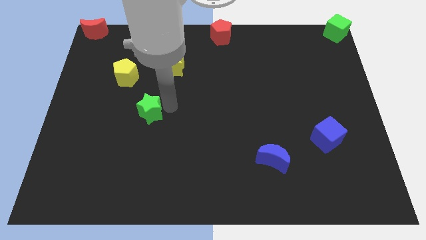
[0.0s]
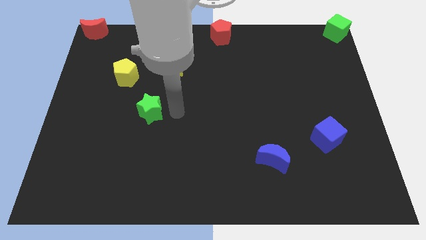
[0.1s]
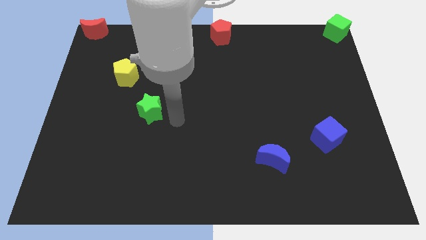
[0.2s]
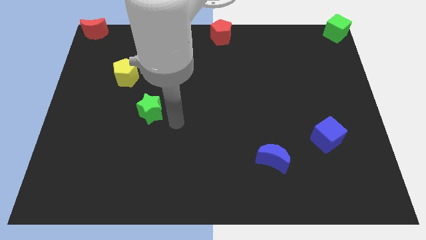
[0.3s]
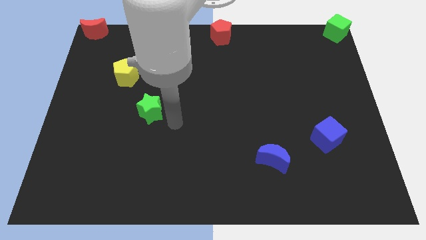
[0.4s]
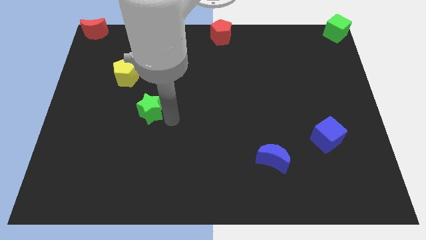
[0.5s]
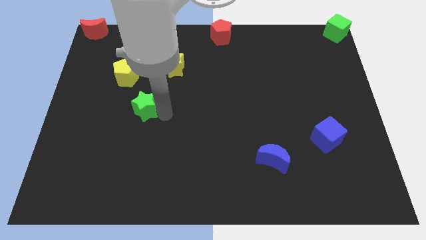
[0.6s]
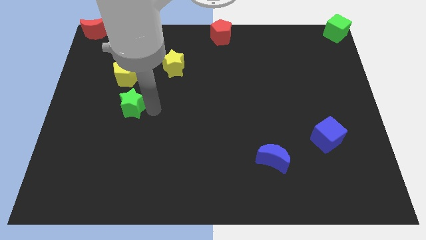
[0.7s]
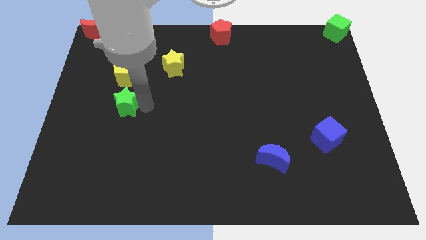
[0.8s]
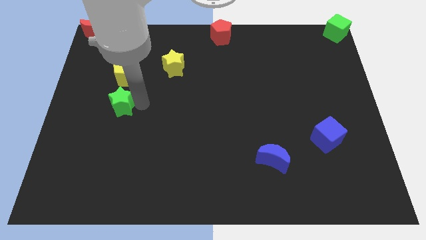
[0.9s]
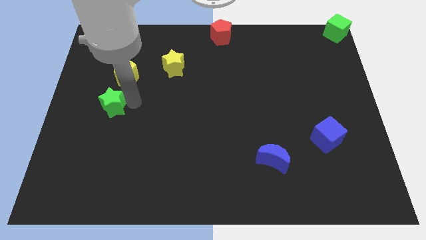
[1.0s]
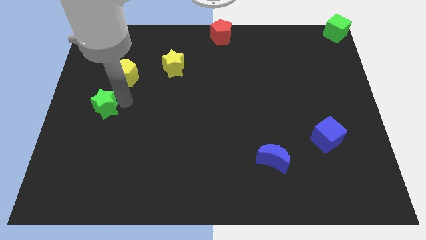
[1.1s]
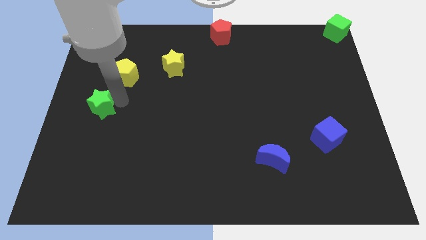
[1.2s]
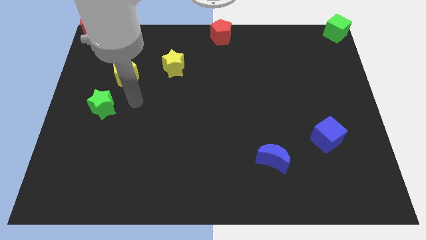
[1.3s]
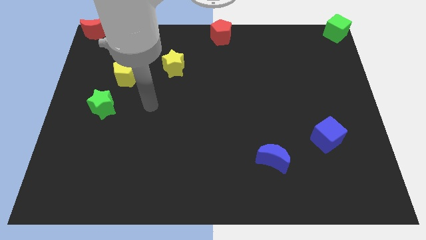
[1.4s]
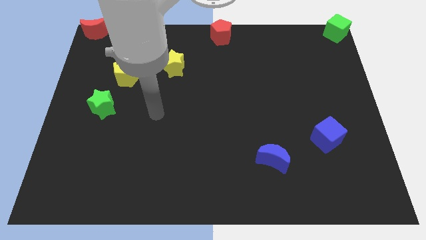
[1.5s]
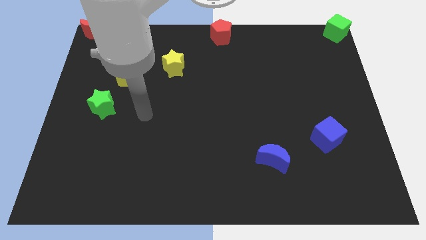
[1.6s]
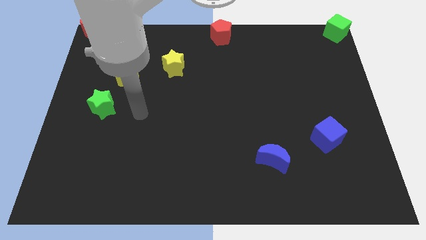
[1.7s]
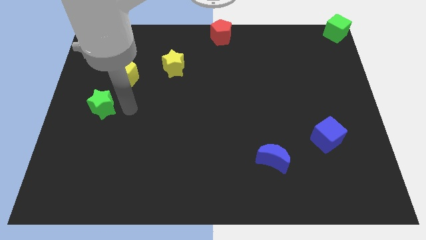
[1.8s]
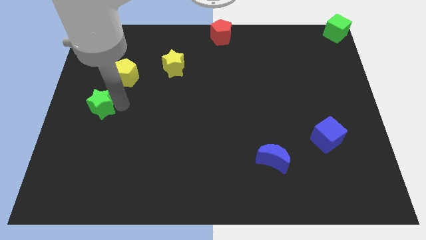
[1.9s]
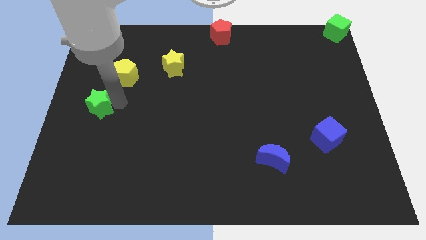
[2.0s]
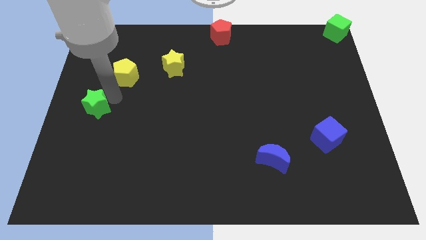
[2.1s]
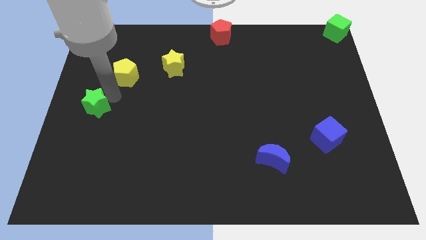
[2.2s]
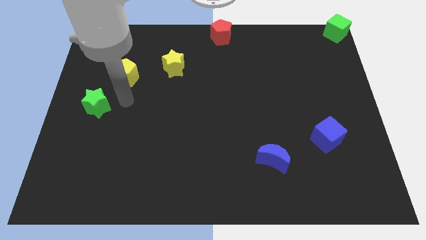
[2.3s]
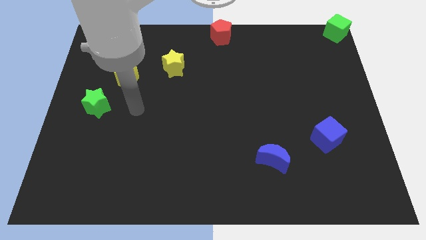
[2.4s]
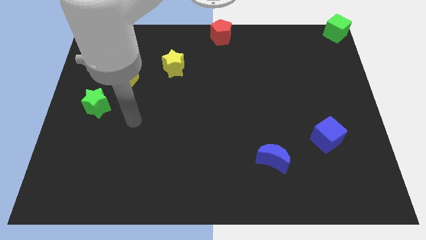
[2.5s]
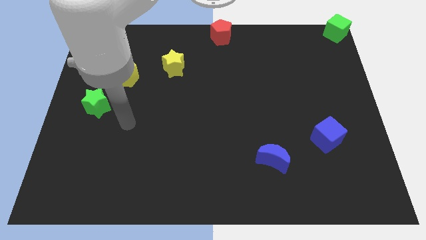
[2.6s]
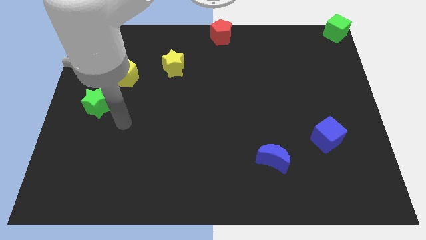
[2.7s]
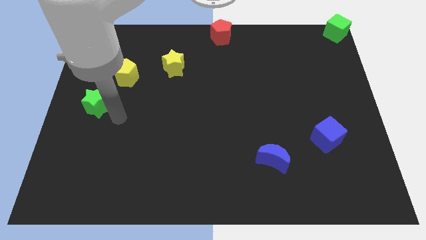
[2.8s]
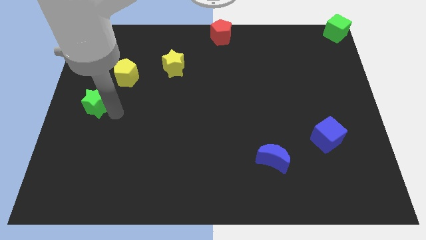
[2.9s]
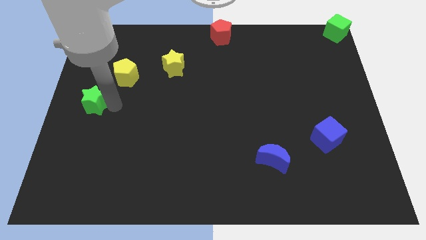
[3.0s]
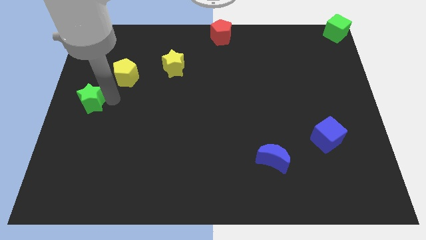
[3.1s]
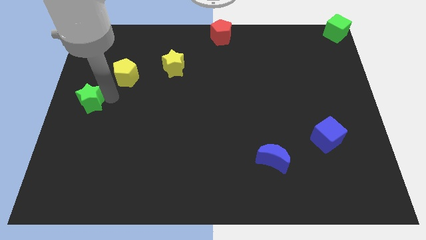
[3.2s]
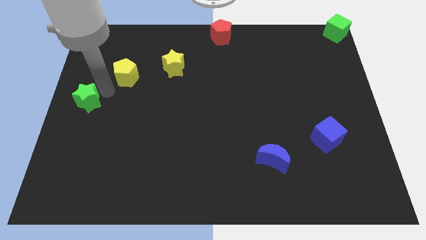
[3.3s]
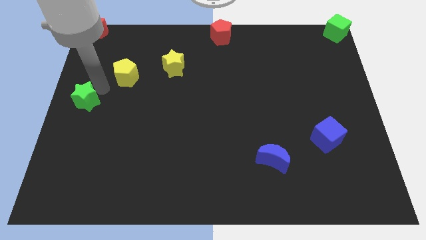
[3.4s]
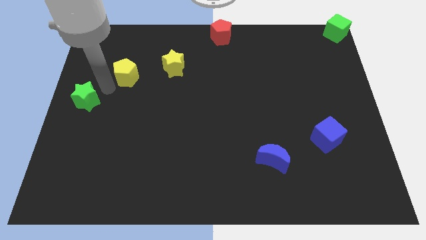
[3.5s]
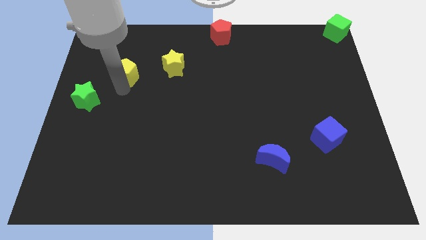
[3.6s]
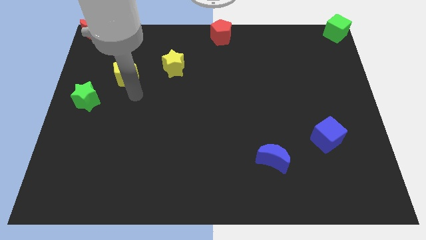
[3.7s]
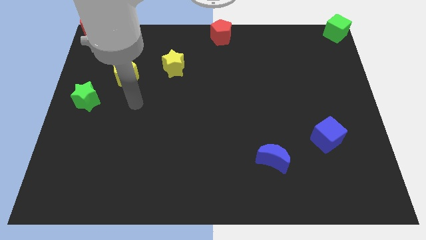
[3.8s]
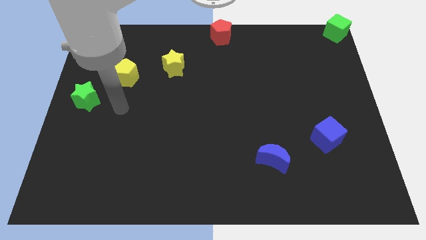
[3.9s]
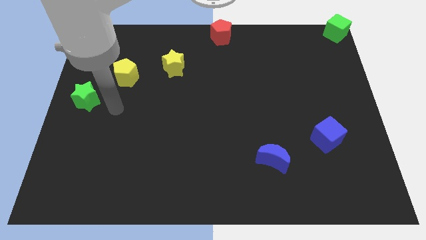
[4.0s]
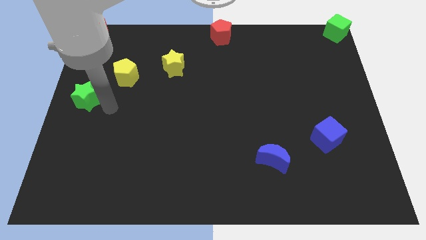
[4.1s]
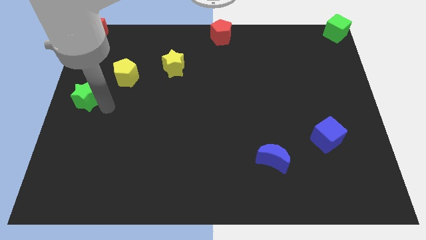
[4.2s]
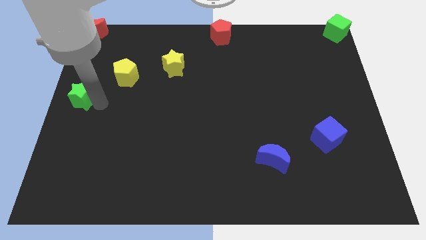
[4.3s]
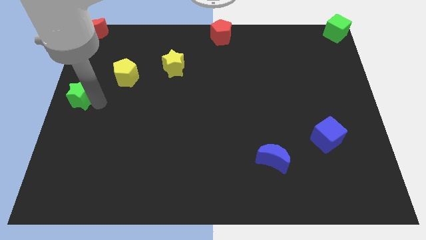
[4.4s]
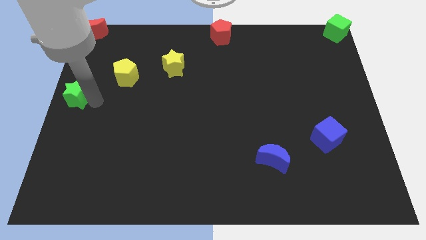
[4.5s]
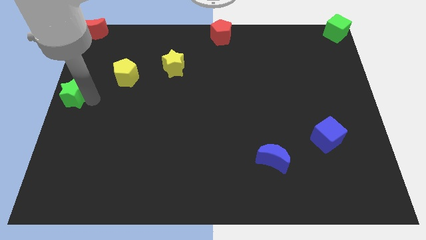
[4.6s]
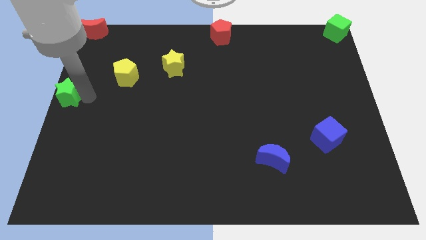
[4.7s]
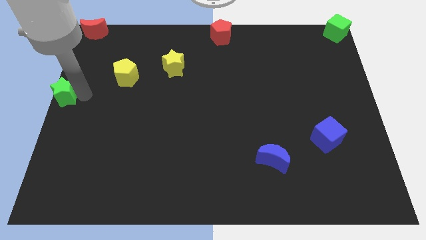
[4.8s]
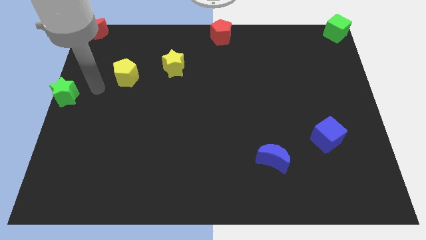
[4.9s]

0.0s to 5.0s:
put the green star below the red crescent

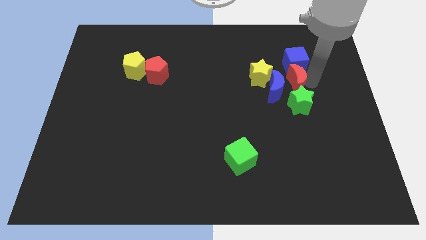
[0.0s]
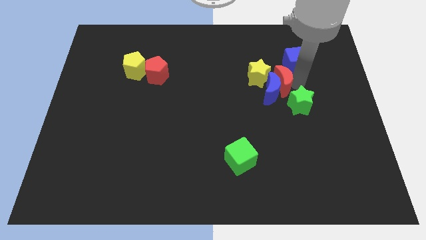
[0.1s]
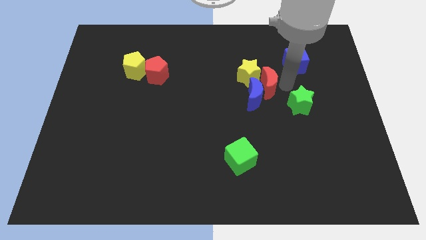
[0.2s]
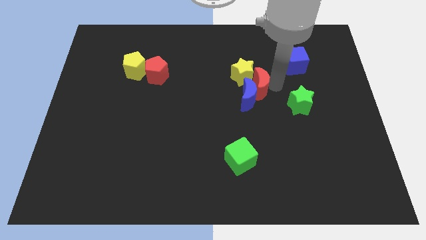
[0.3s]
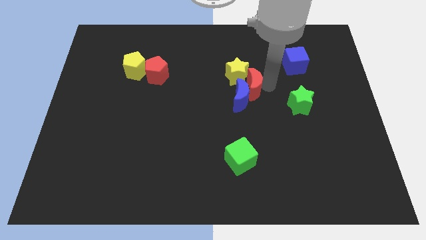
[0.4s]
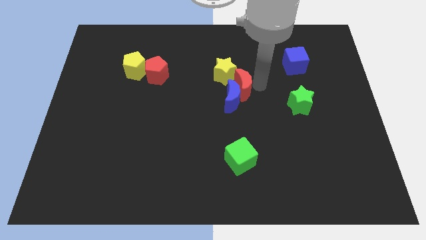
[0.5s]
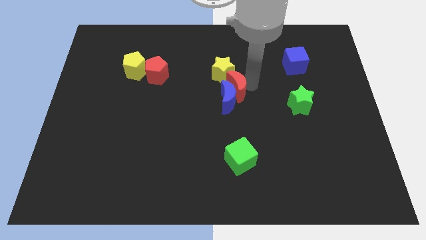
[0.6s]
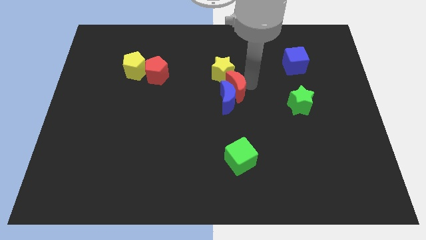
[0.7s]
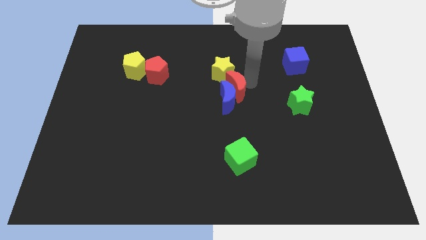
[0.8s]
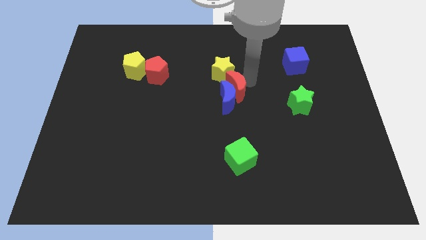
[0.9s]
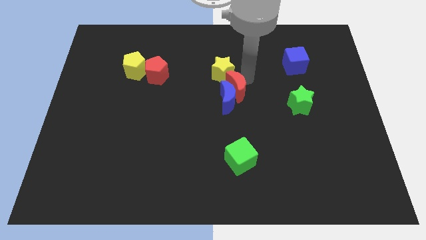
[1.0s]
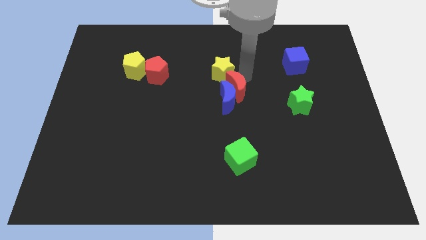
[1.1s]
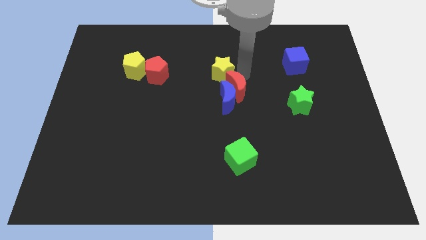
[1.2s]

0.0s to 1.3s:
push red crescent above green cube

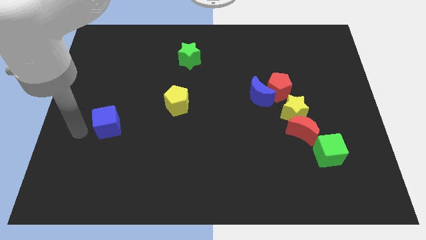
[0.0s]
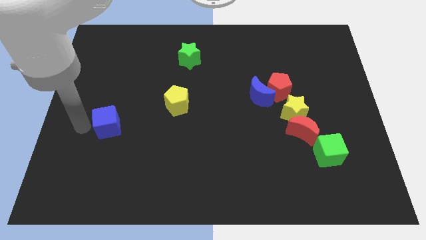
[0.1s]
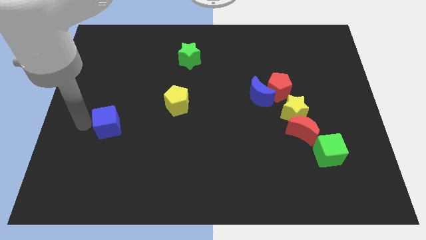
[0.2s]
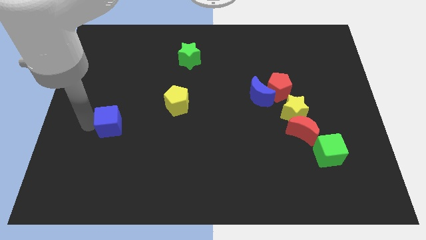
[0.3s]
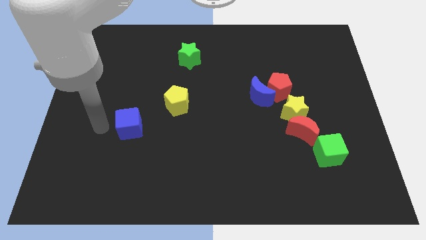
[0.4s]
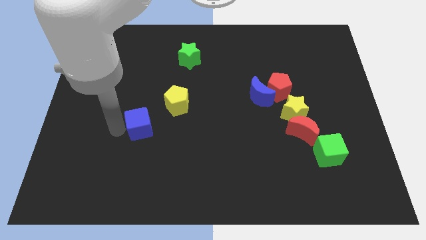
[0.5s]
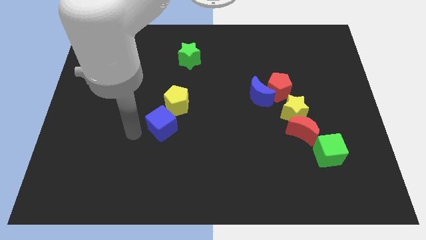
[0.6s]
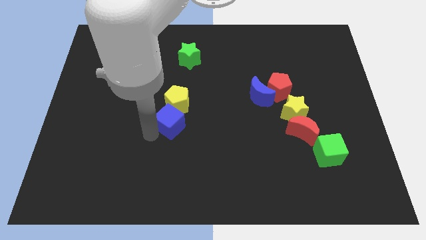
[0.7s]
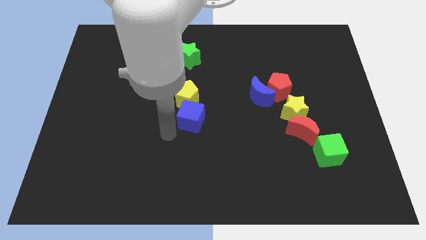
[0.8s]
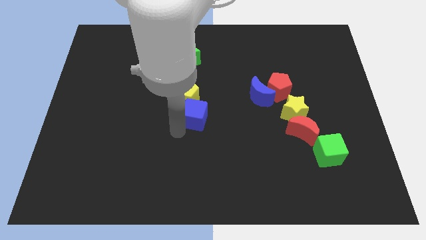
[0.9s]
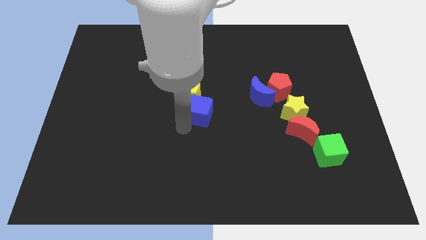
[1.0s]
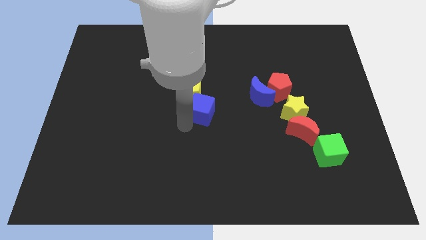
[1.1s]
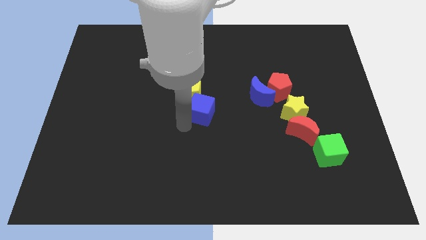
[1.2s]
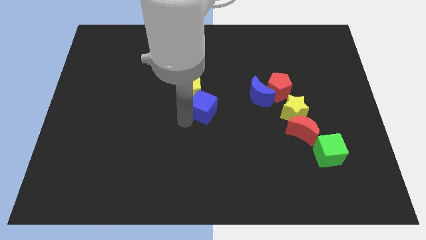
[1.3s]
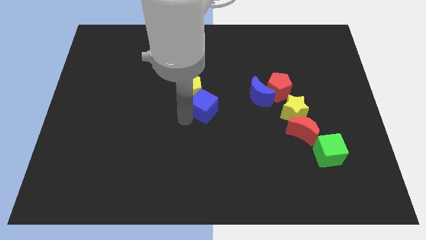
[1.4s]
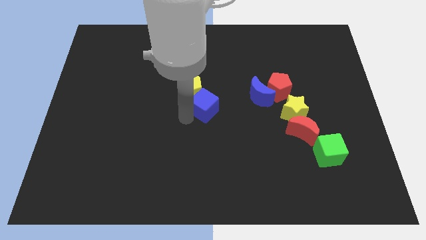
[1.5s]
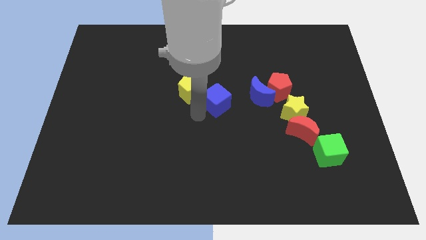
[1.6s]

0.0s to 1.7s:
push the blue cube into the yellow pentagon

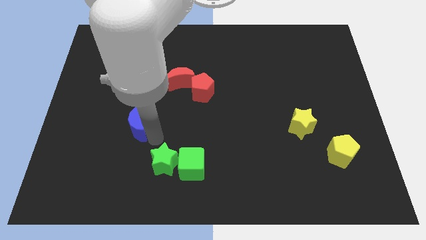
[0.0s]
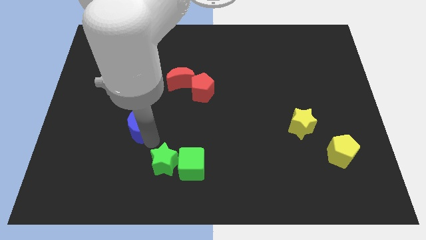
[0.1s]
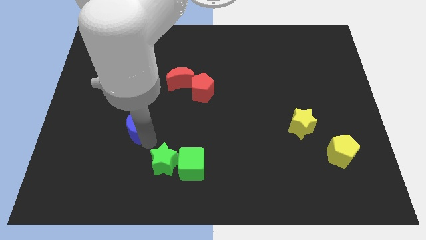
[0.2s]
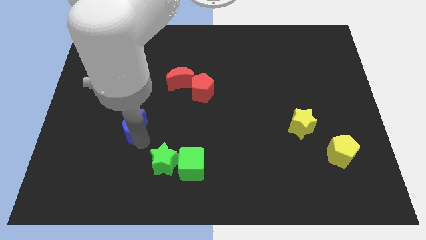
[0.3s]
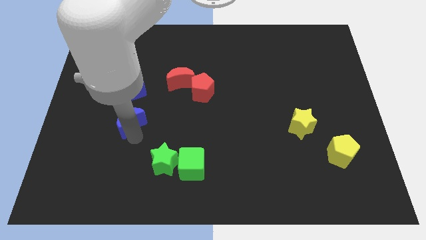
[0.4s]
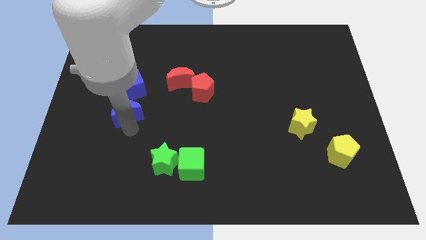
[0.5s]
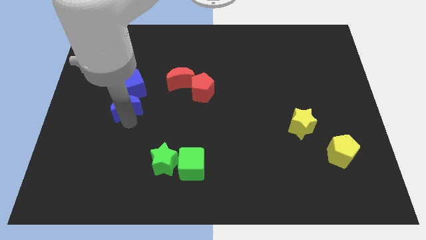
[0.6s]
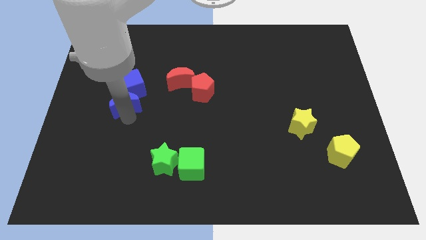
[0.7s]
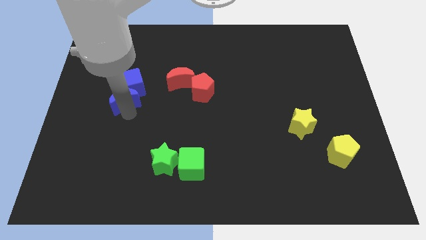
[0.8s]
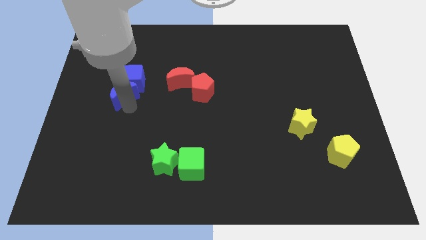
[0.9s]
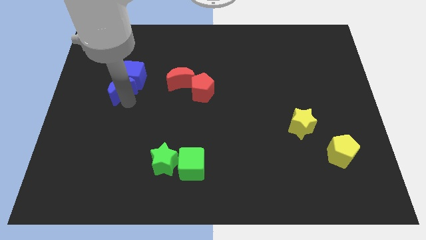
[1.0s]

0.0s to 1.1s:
move blue moon into blue cube
